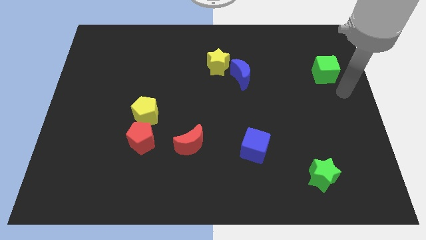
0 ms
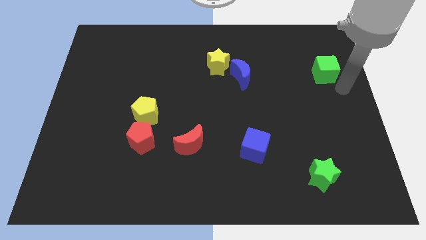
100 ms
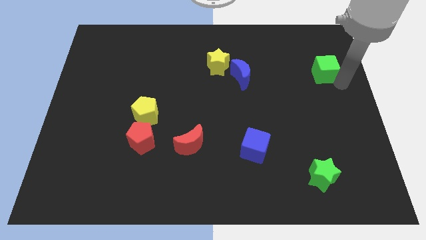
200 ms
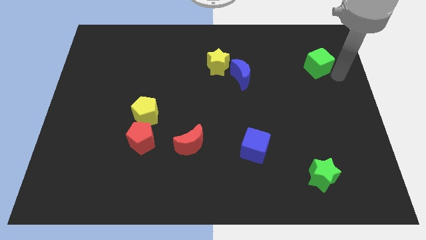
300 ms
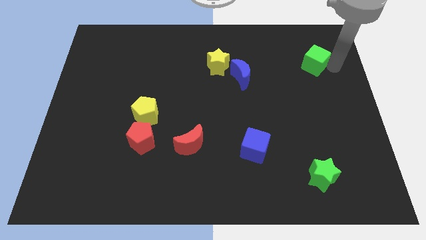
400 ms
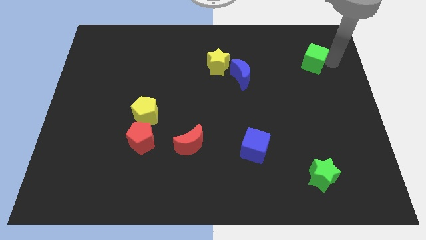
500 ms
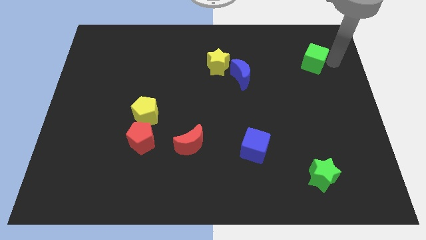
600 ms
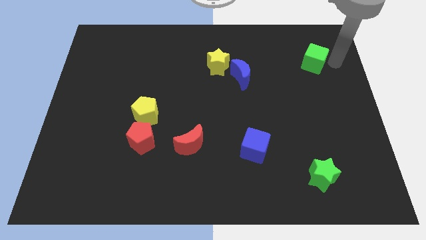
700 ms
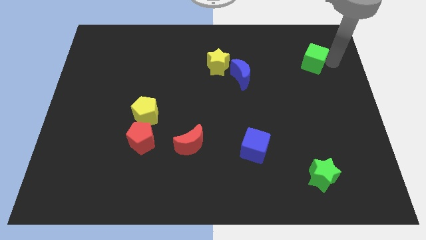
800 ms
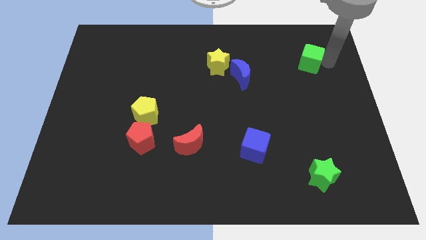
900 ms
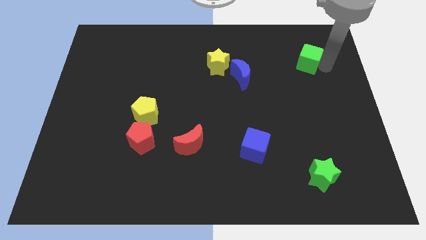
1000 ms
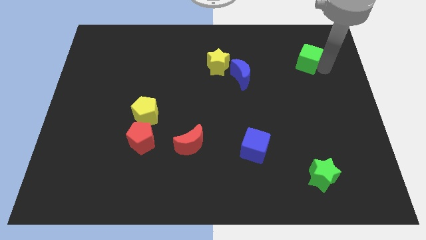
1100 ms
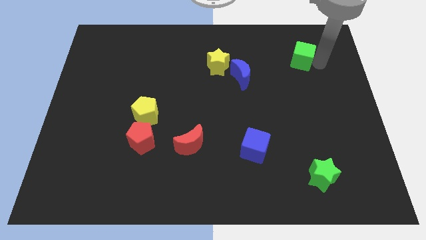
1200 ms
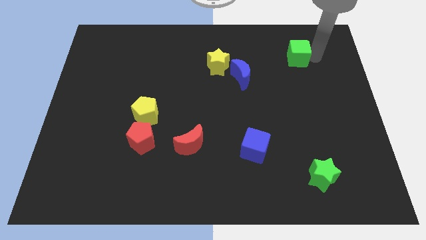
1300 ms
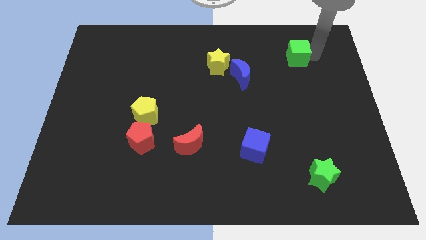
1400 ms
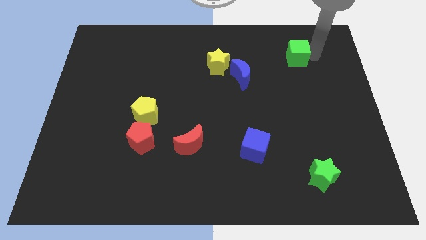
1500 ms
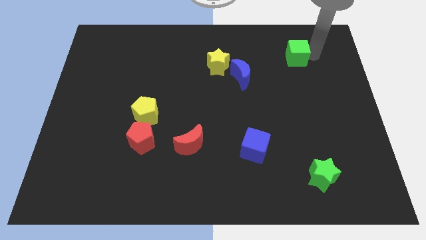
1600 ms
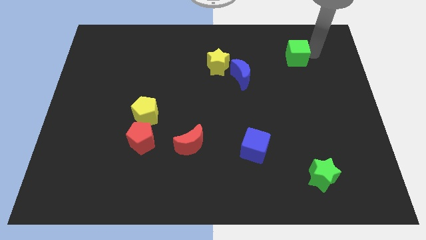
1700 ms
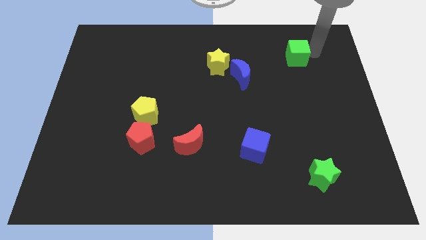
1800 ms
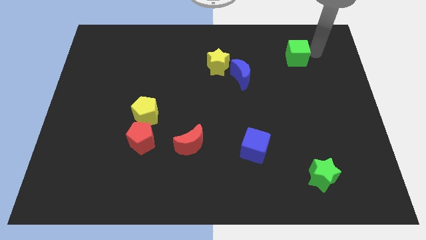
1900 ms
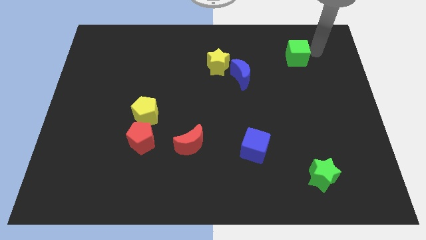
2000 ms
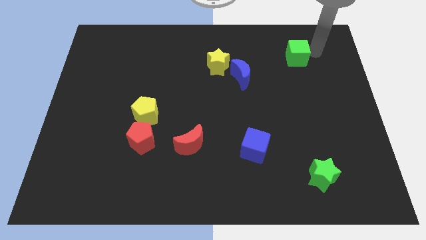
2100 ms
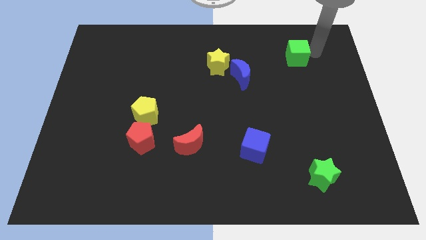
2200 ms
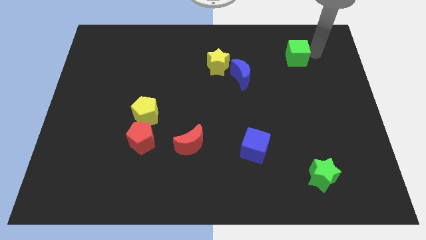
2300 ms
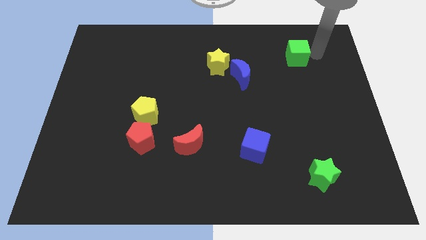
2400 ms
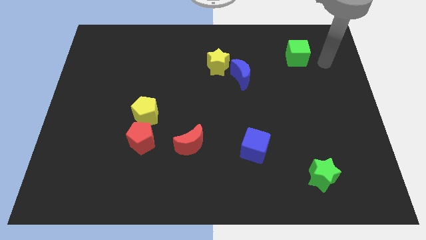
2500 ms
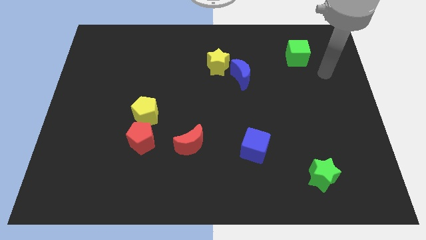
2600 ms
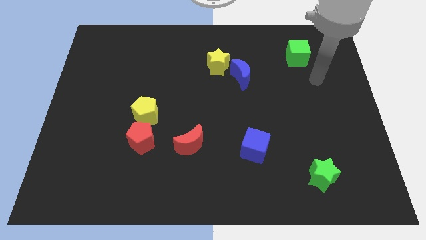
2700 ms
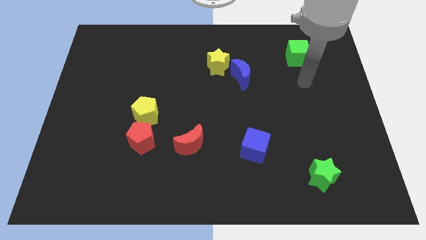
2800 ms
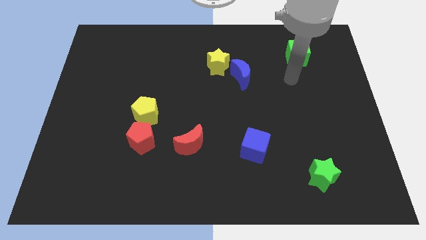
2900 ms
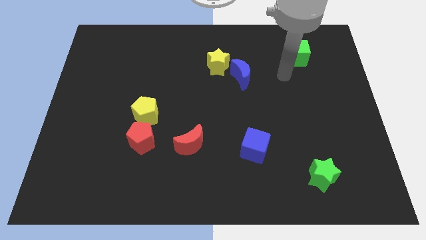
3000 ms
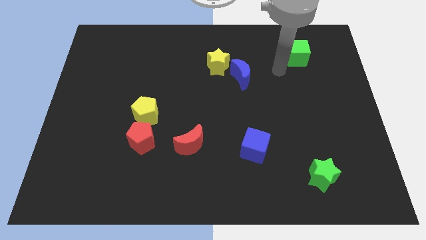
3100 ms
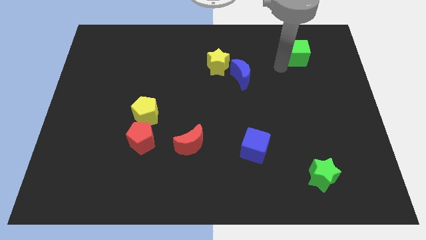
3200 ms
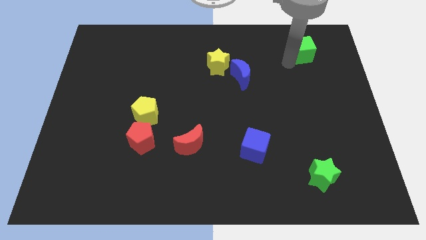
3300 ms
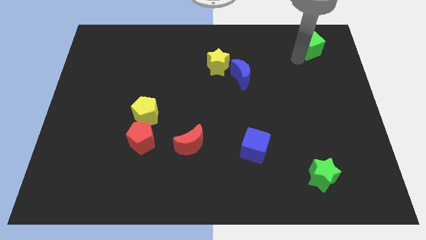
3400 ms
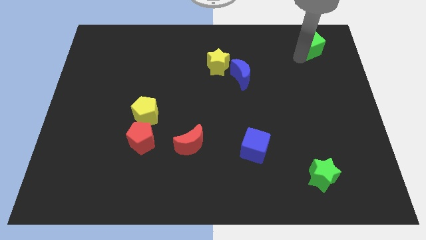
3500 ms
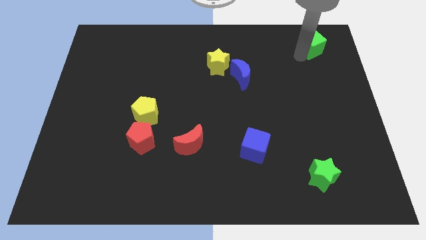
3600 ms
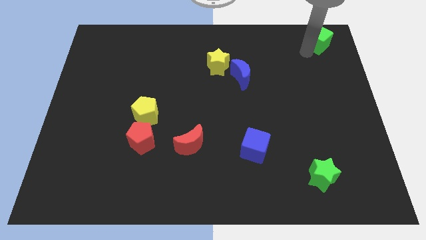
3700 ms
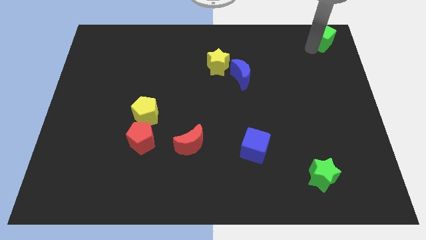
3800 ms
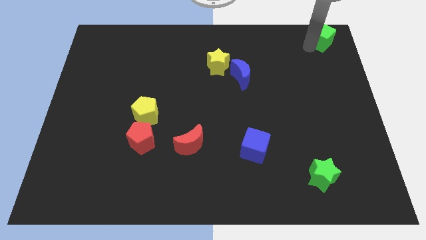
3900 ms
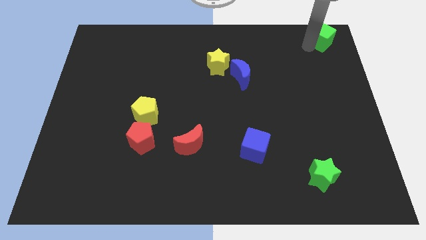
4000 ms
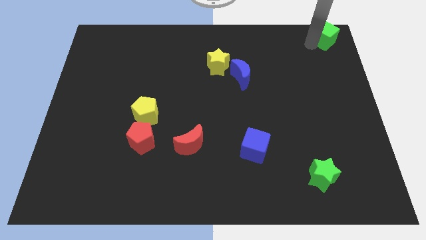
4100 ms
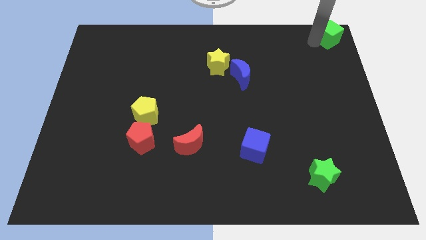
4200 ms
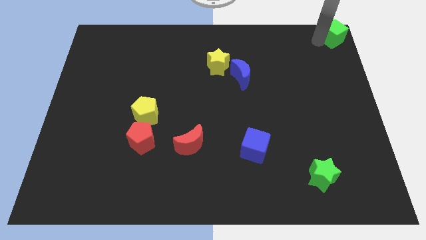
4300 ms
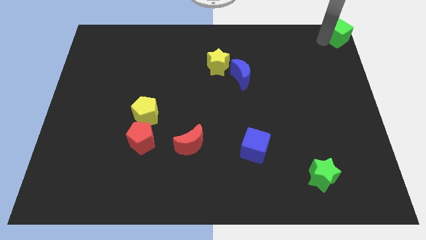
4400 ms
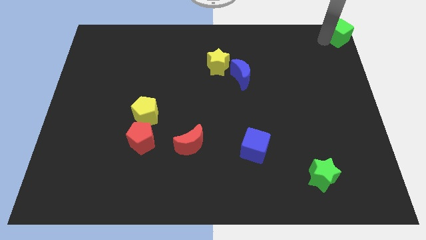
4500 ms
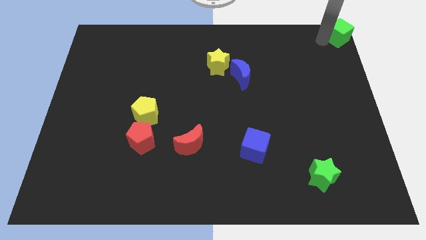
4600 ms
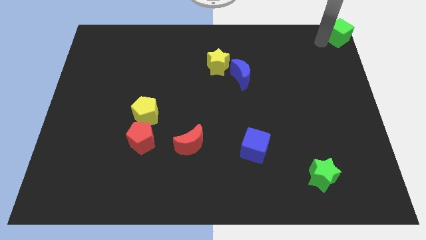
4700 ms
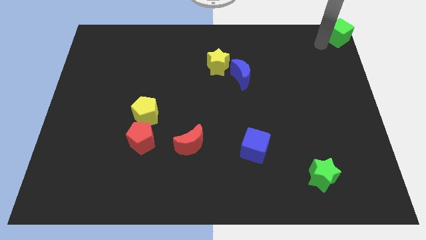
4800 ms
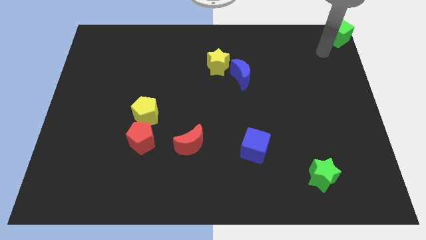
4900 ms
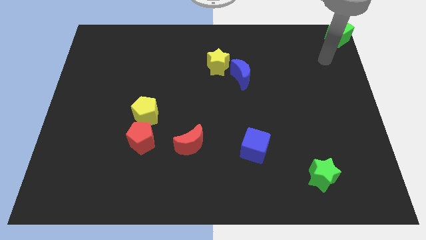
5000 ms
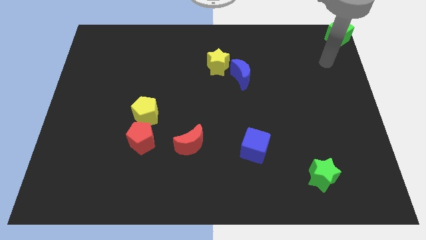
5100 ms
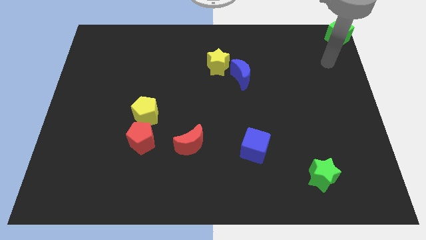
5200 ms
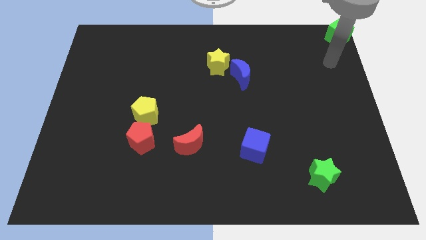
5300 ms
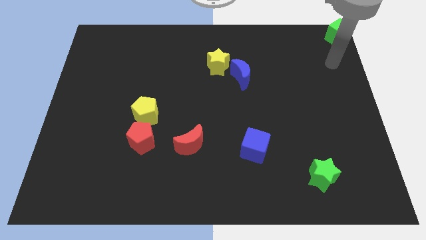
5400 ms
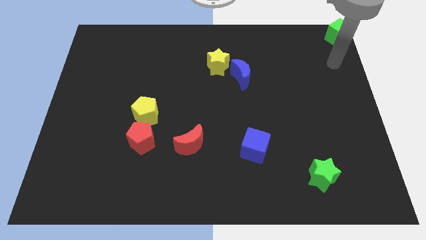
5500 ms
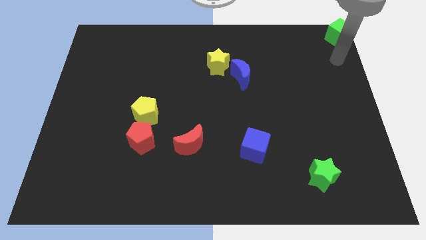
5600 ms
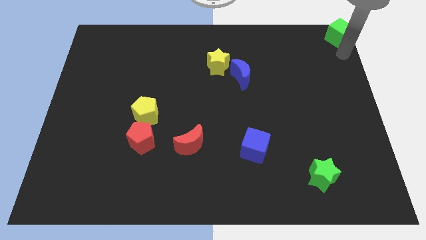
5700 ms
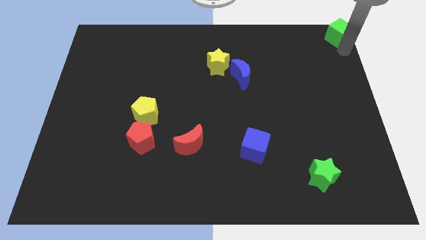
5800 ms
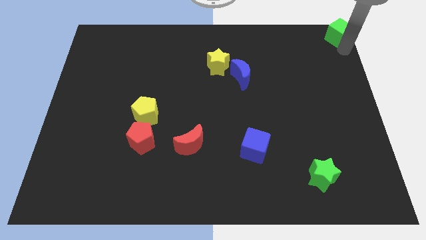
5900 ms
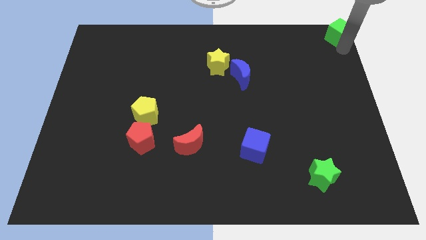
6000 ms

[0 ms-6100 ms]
push the green cube to the top right corner of the board

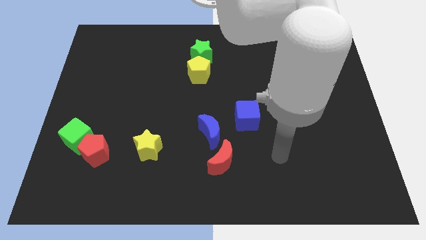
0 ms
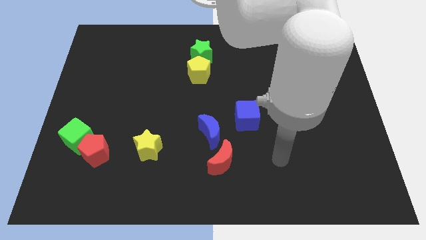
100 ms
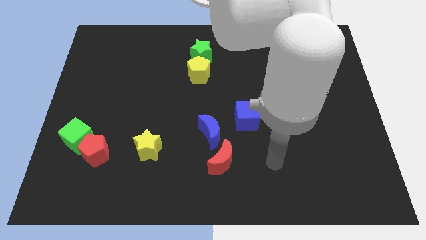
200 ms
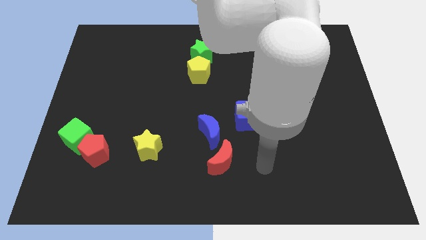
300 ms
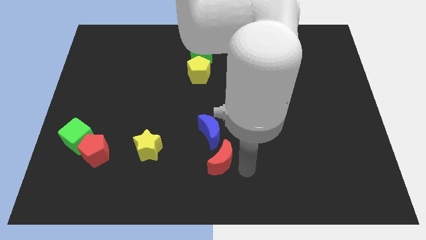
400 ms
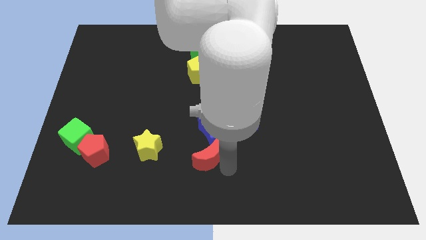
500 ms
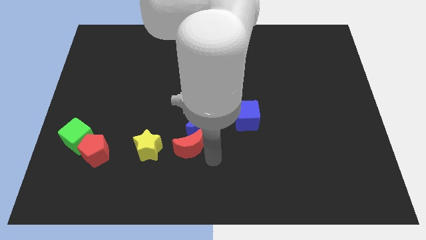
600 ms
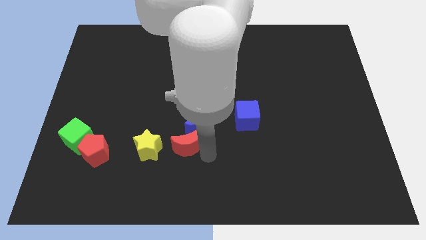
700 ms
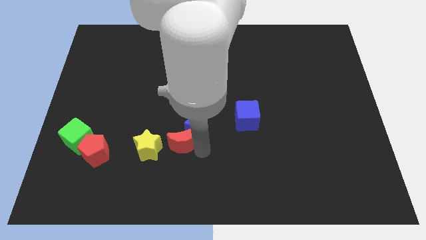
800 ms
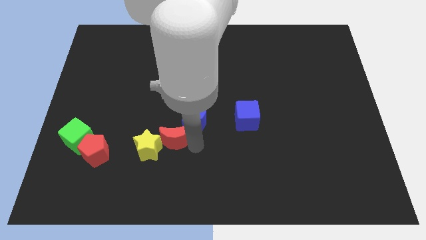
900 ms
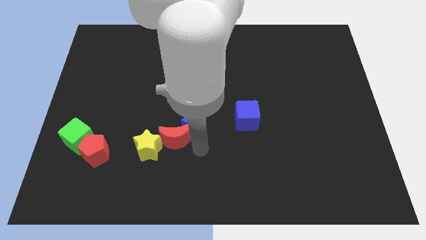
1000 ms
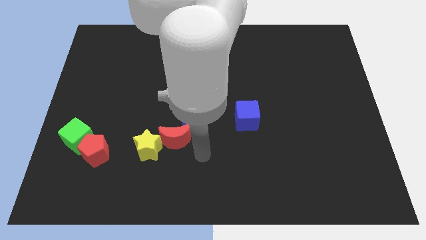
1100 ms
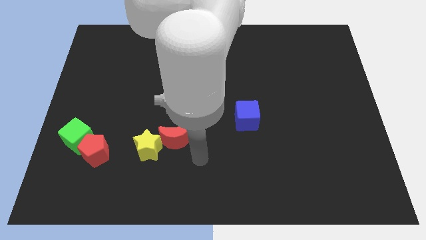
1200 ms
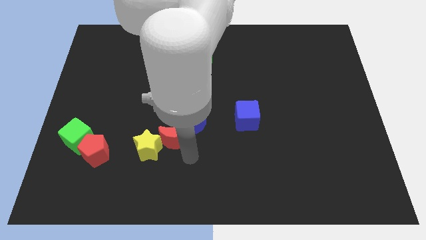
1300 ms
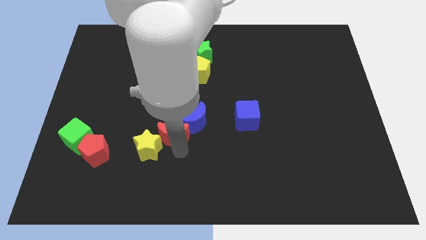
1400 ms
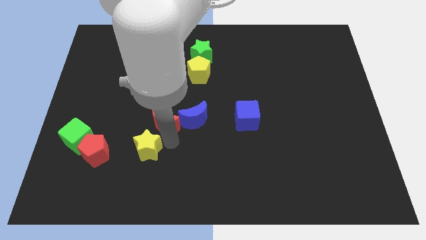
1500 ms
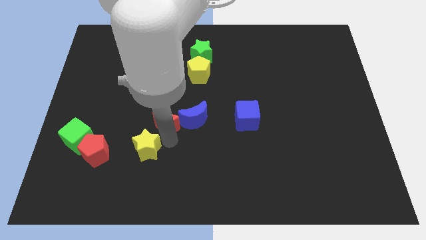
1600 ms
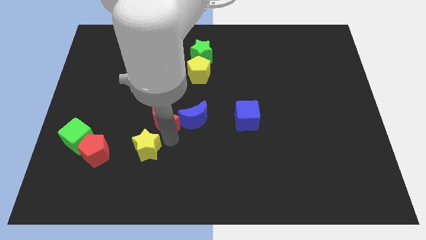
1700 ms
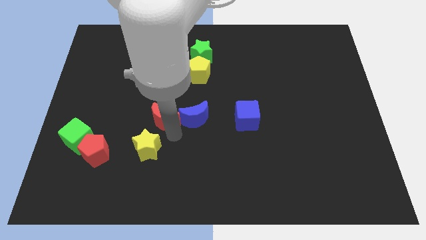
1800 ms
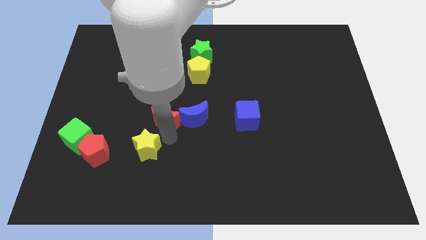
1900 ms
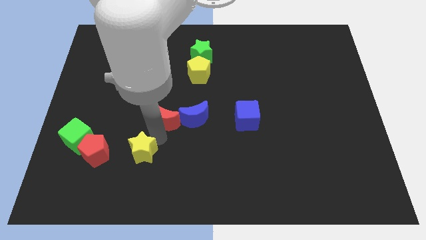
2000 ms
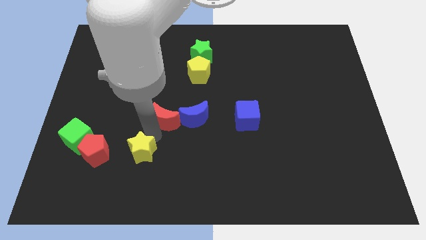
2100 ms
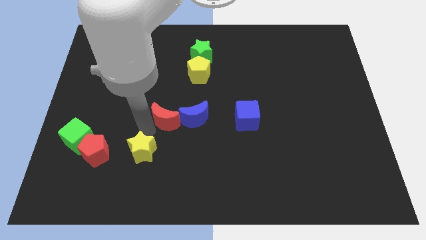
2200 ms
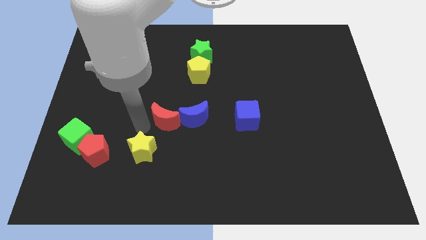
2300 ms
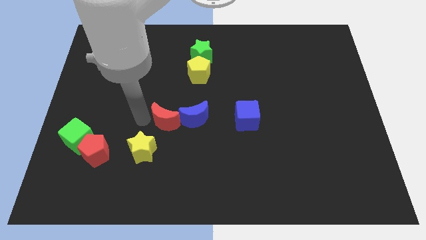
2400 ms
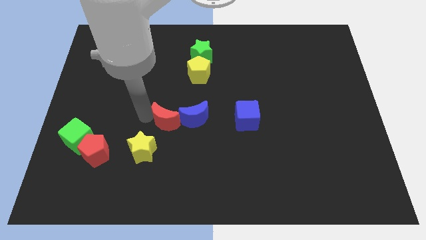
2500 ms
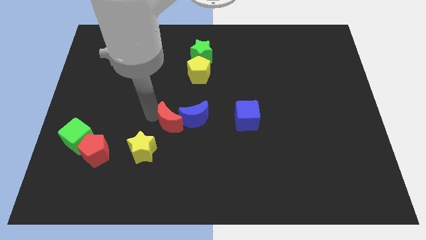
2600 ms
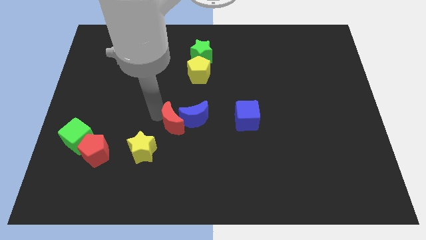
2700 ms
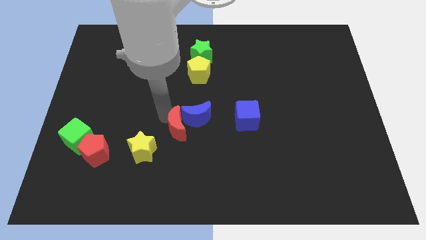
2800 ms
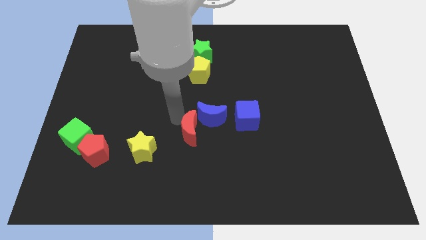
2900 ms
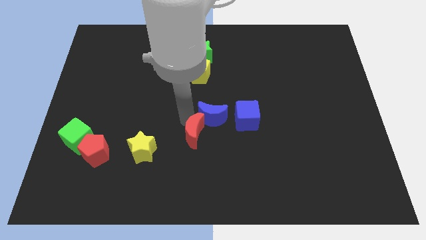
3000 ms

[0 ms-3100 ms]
move the blue crescent left to the blue crescent
